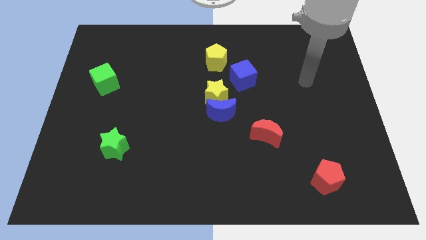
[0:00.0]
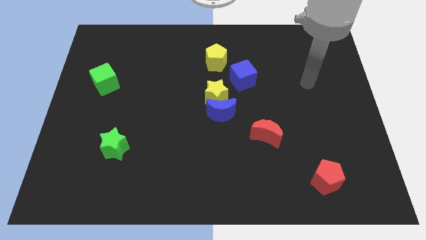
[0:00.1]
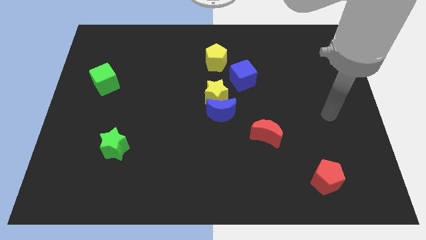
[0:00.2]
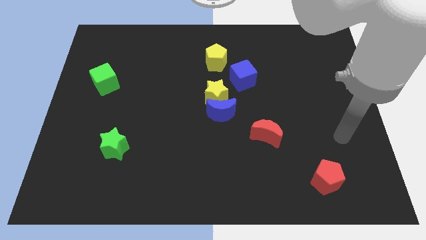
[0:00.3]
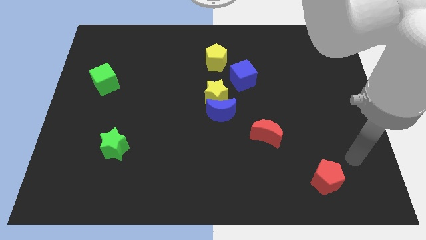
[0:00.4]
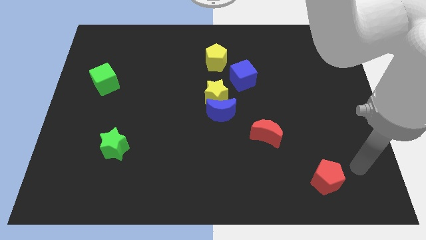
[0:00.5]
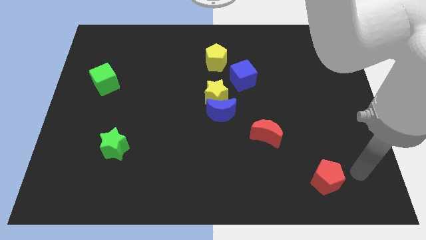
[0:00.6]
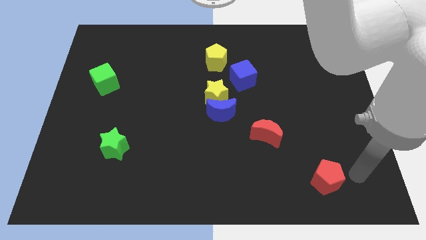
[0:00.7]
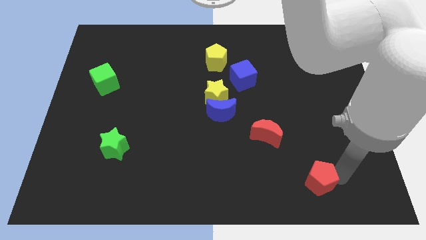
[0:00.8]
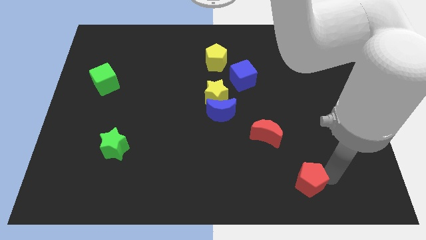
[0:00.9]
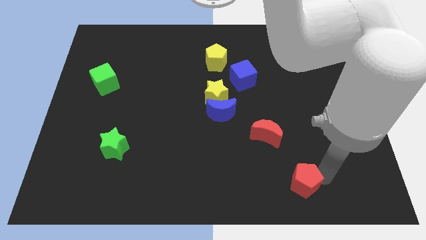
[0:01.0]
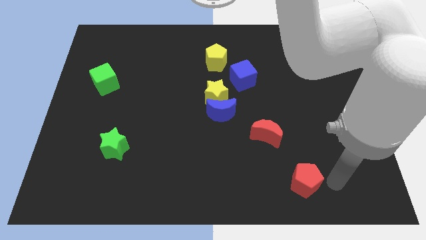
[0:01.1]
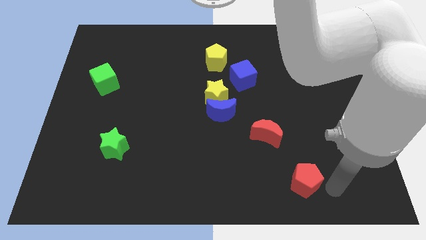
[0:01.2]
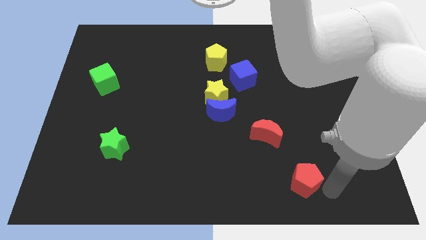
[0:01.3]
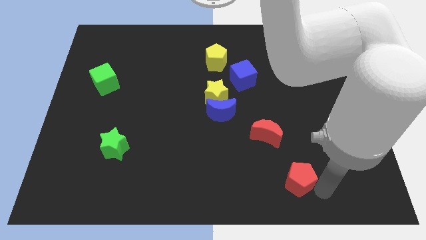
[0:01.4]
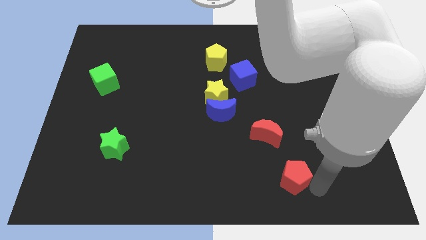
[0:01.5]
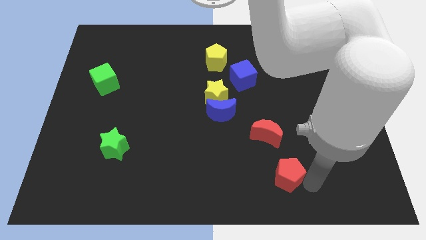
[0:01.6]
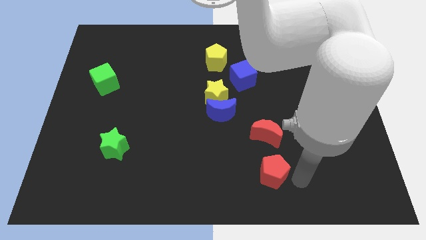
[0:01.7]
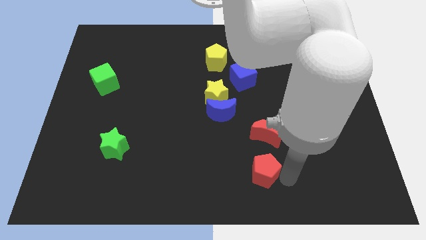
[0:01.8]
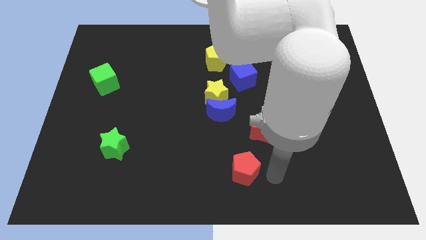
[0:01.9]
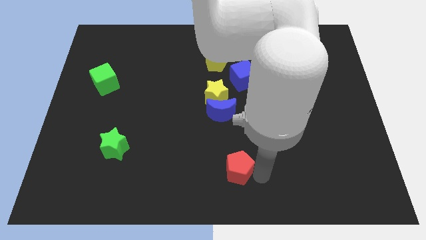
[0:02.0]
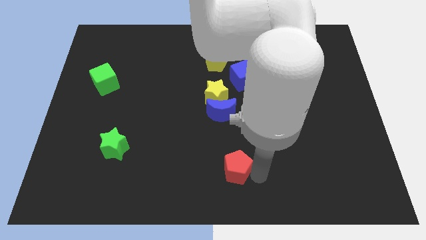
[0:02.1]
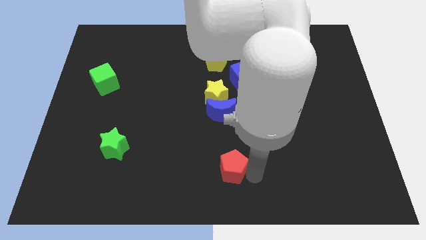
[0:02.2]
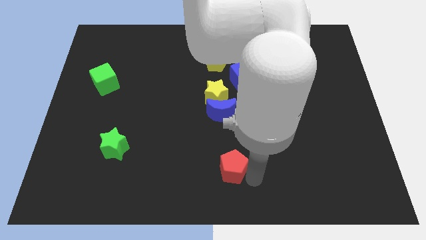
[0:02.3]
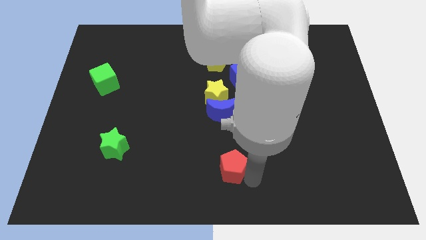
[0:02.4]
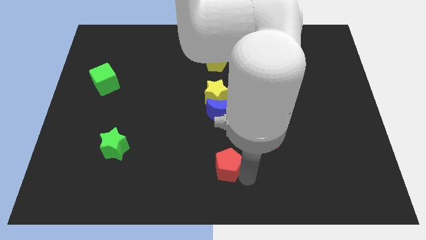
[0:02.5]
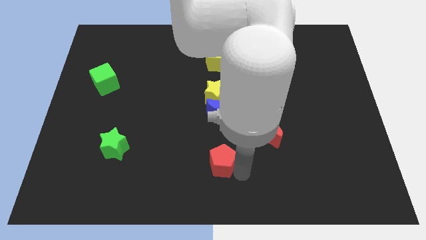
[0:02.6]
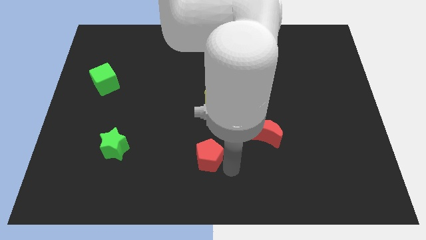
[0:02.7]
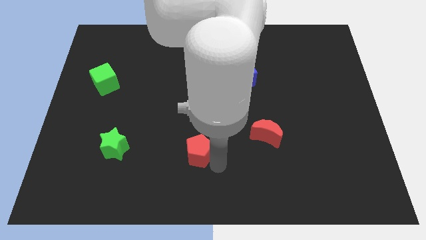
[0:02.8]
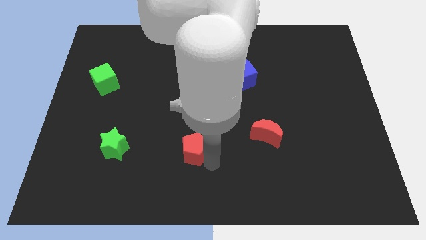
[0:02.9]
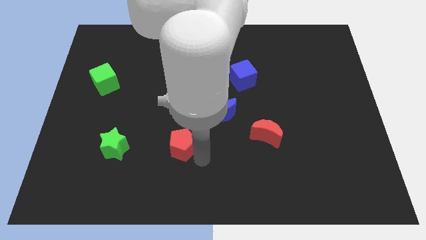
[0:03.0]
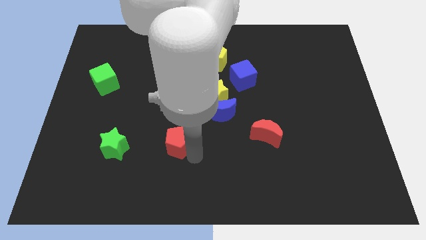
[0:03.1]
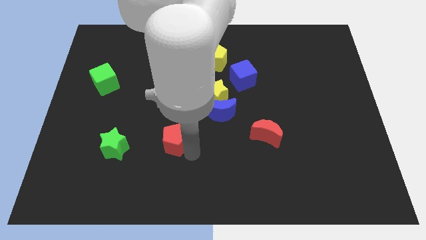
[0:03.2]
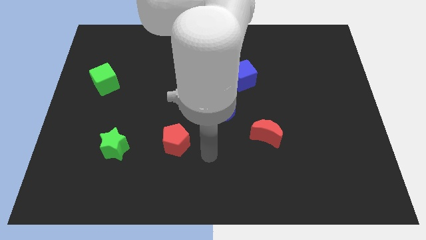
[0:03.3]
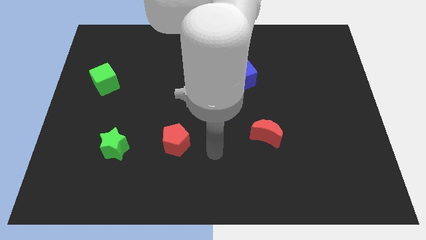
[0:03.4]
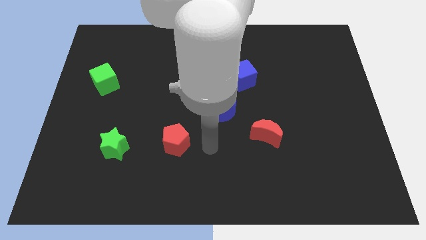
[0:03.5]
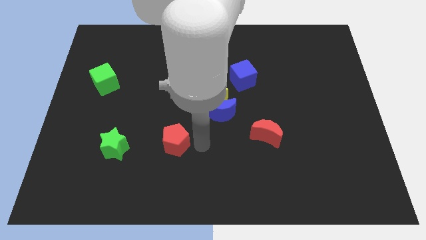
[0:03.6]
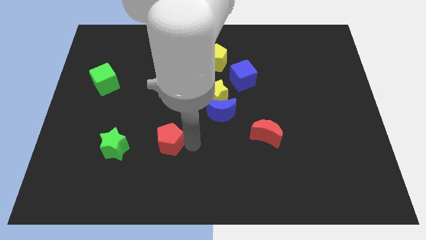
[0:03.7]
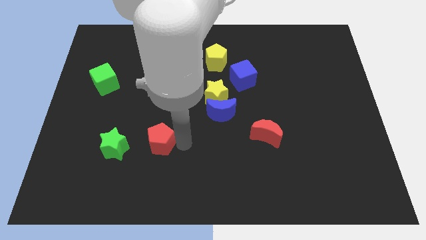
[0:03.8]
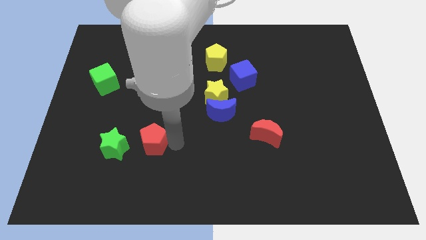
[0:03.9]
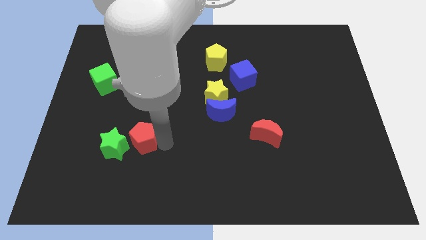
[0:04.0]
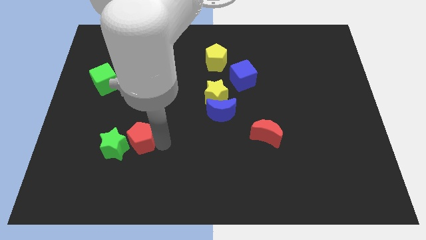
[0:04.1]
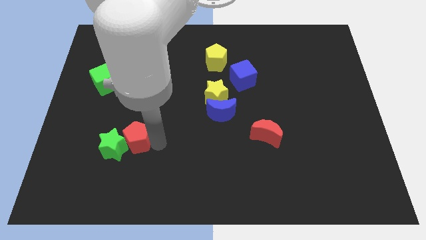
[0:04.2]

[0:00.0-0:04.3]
slide the red pentagon towards the green star

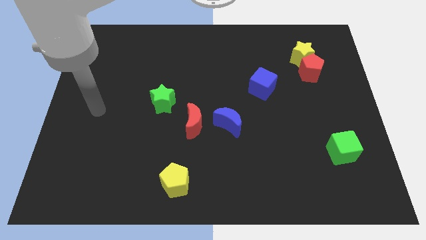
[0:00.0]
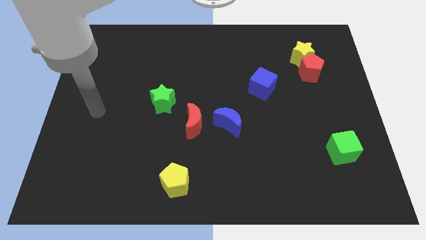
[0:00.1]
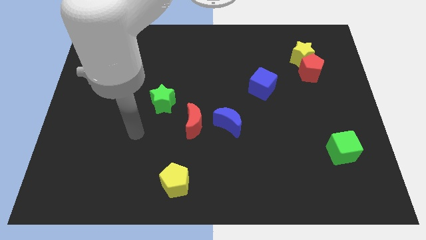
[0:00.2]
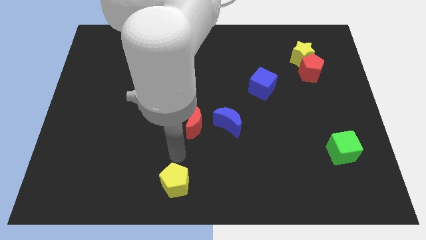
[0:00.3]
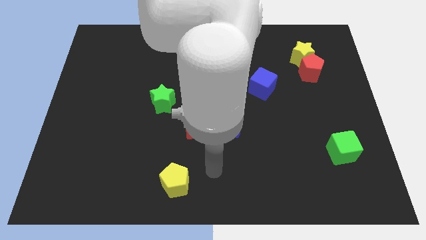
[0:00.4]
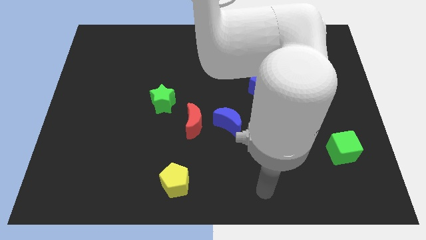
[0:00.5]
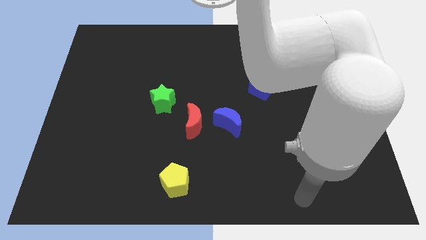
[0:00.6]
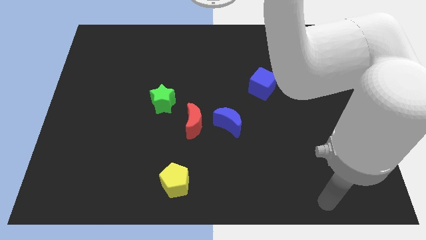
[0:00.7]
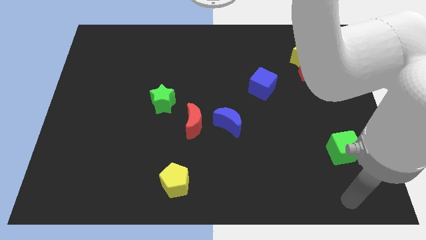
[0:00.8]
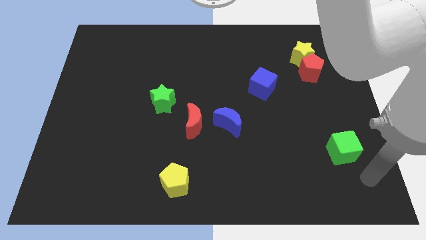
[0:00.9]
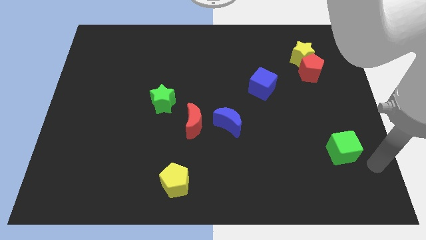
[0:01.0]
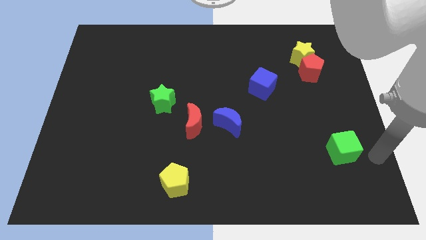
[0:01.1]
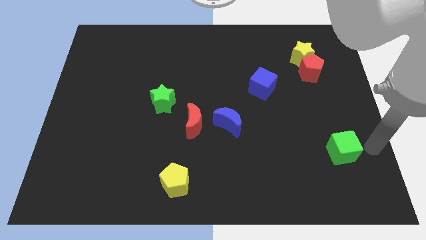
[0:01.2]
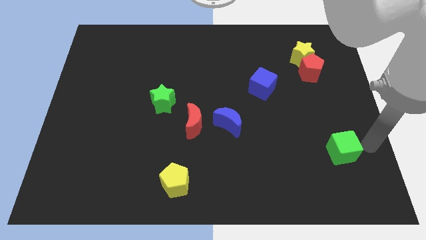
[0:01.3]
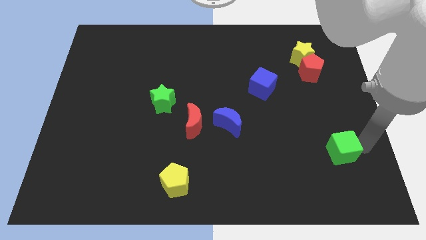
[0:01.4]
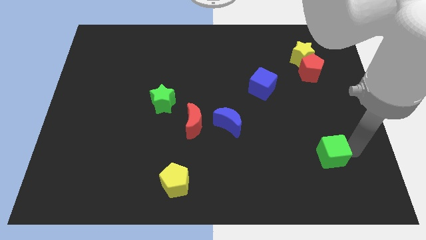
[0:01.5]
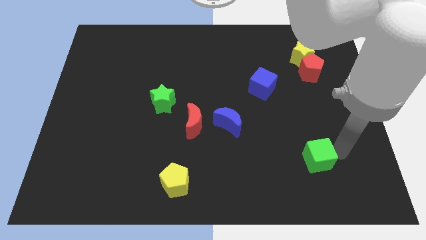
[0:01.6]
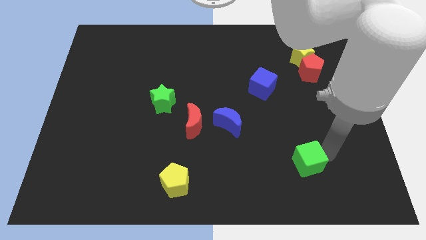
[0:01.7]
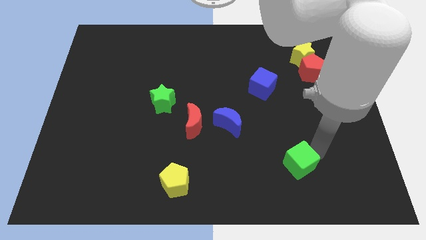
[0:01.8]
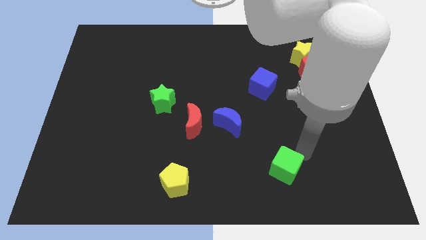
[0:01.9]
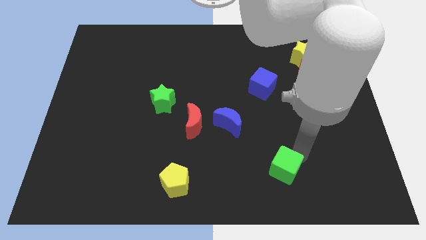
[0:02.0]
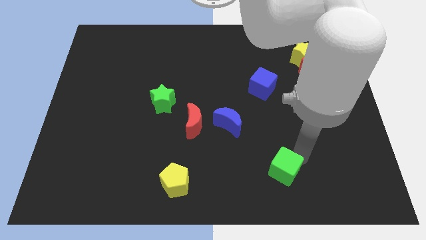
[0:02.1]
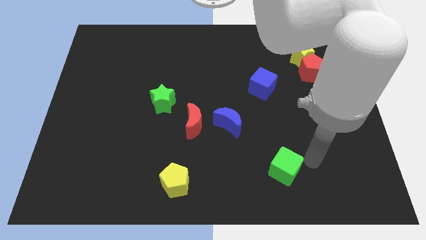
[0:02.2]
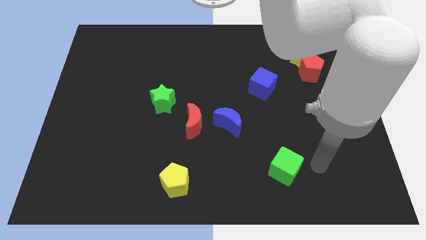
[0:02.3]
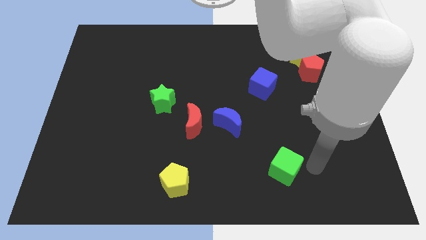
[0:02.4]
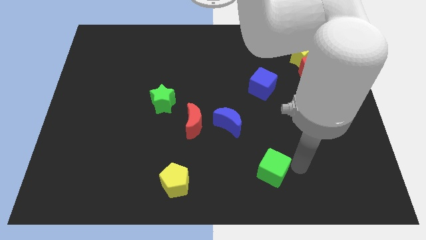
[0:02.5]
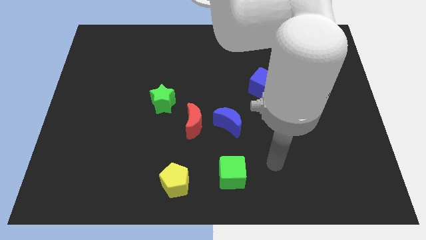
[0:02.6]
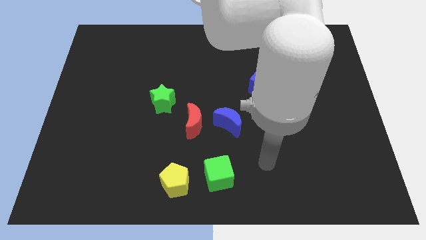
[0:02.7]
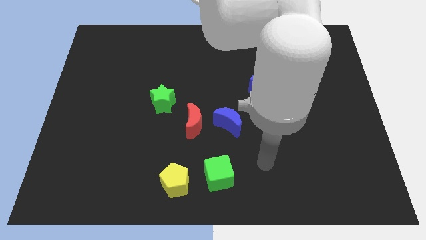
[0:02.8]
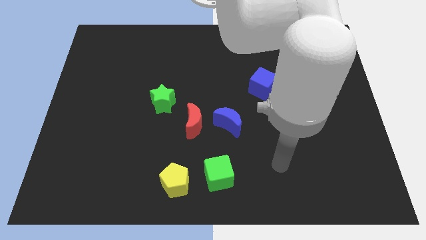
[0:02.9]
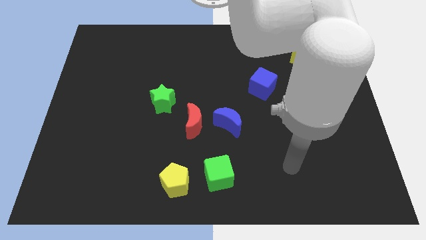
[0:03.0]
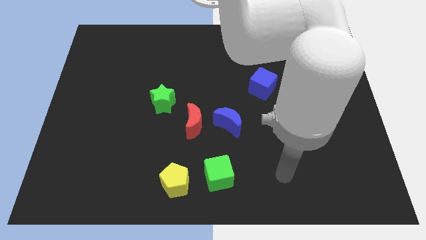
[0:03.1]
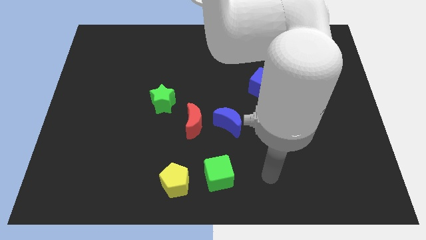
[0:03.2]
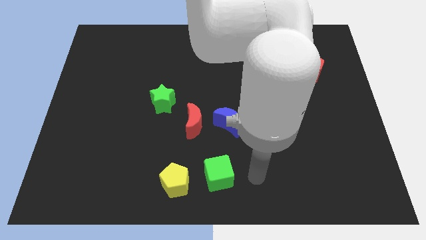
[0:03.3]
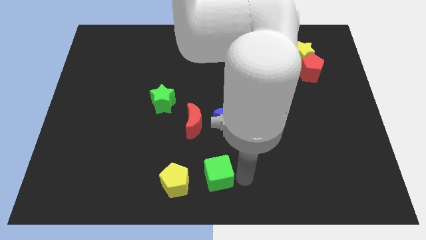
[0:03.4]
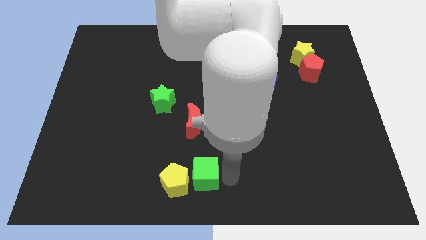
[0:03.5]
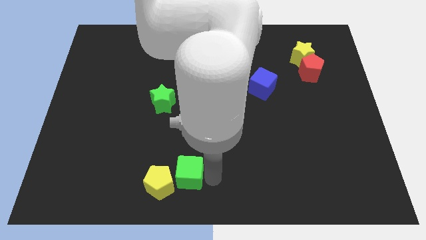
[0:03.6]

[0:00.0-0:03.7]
move the green cube next to the yellow pentagon

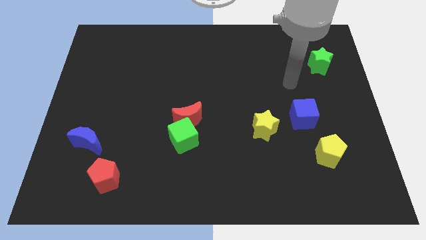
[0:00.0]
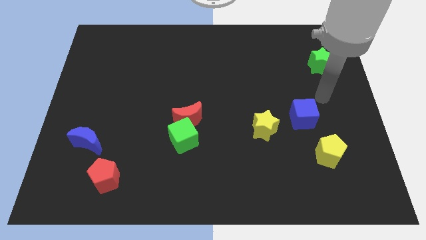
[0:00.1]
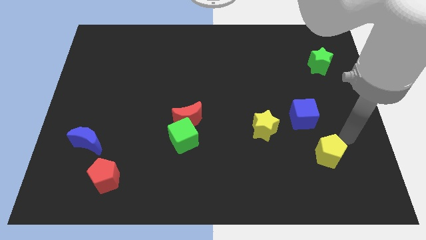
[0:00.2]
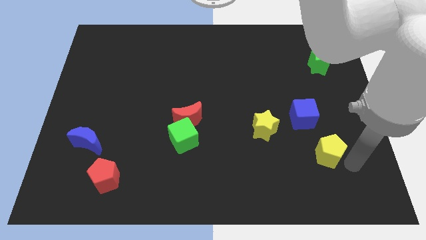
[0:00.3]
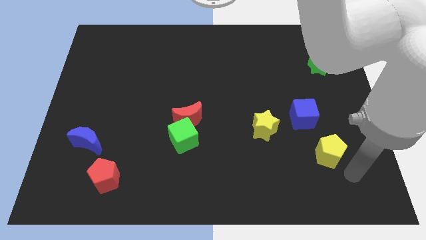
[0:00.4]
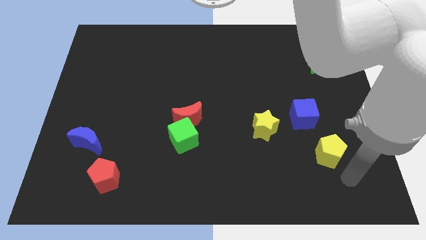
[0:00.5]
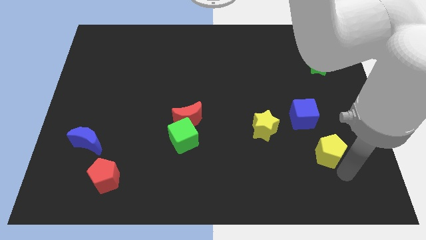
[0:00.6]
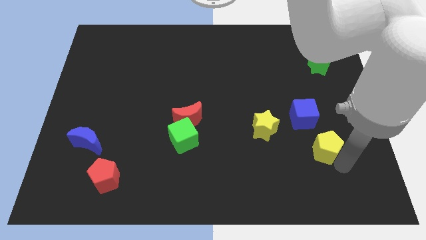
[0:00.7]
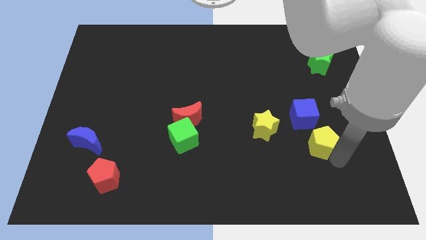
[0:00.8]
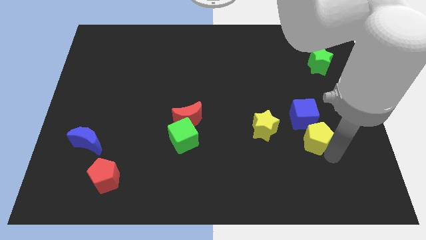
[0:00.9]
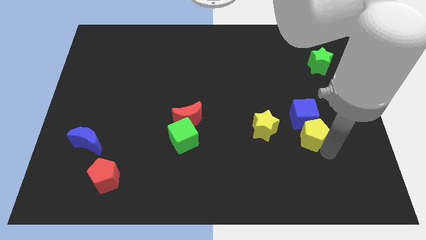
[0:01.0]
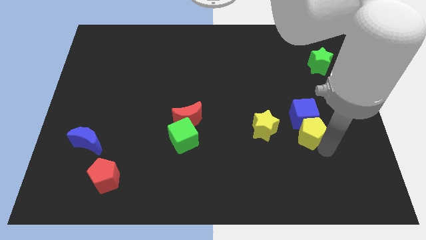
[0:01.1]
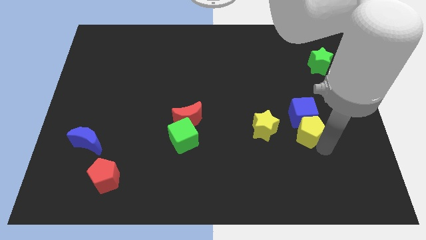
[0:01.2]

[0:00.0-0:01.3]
slide the yellow pentagon close to the blue cube
